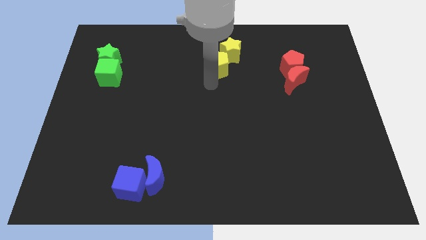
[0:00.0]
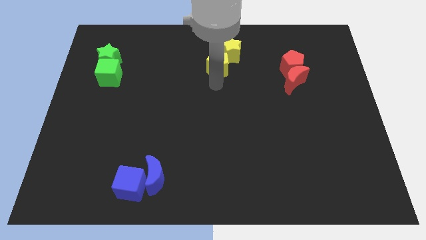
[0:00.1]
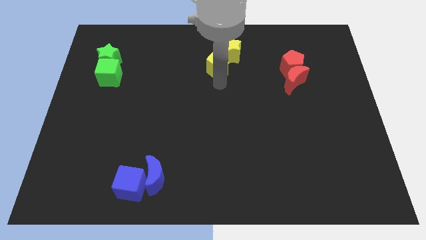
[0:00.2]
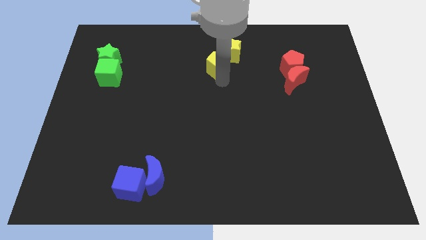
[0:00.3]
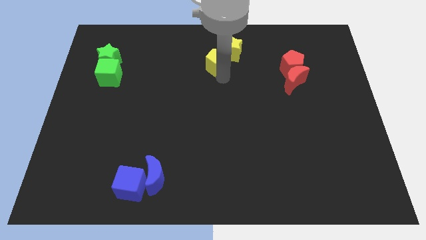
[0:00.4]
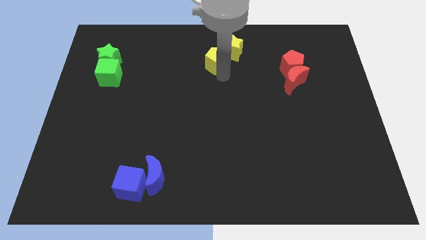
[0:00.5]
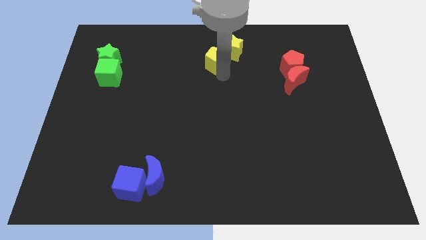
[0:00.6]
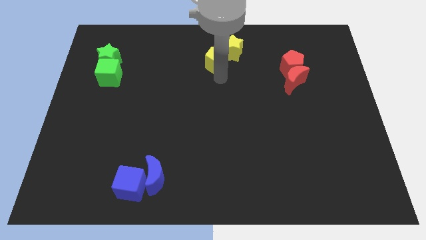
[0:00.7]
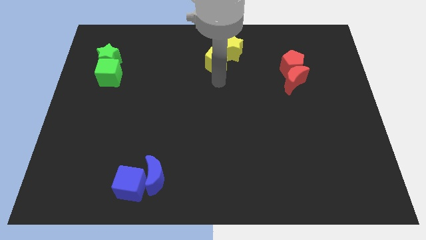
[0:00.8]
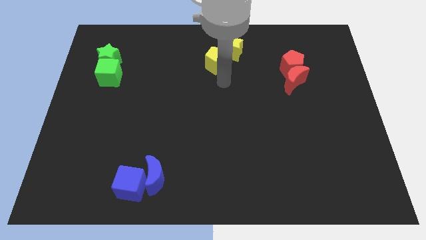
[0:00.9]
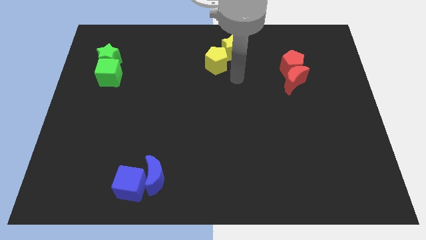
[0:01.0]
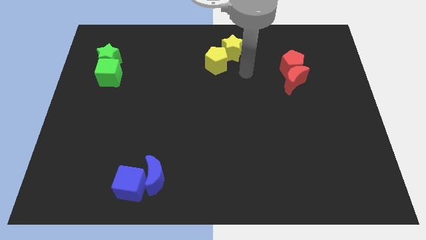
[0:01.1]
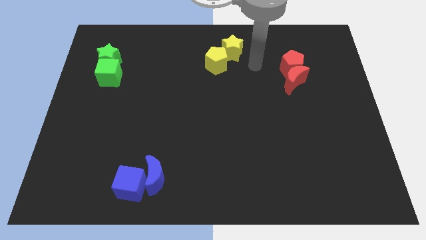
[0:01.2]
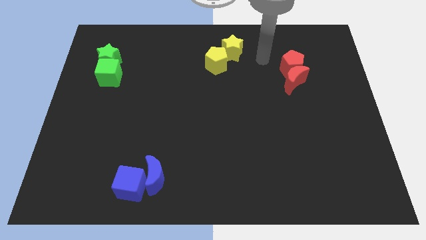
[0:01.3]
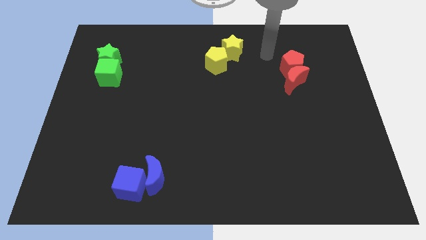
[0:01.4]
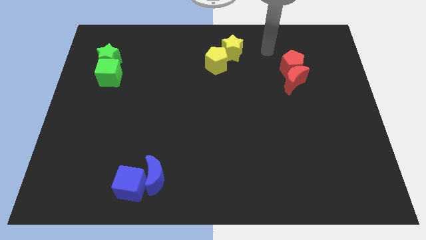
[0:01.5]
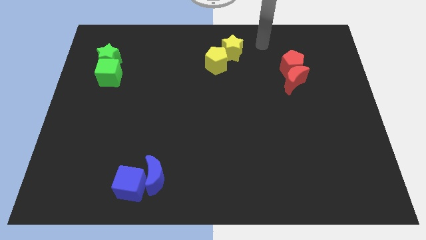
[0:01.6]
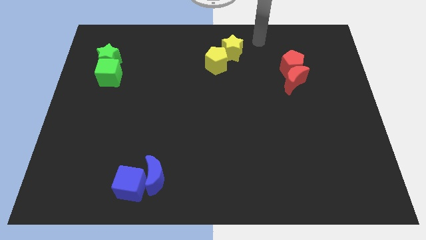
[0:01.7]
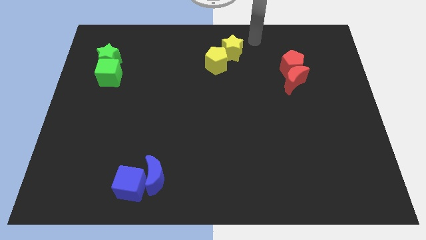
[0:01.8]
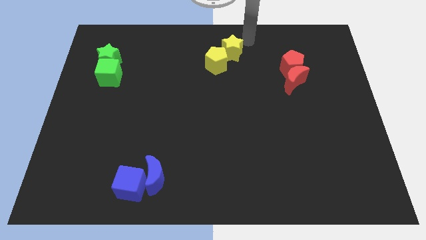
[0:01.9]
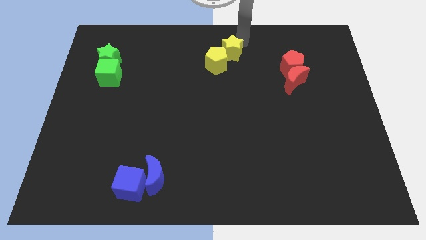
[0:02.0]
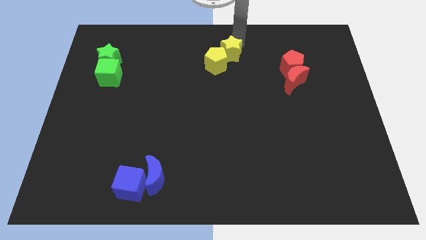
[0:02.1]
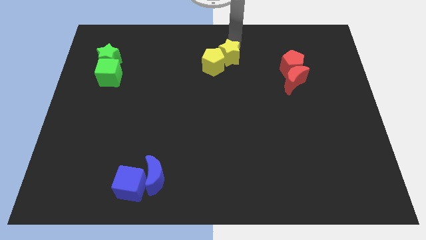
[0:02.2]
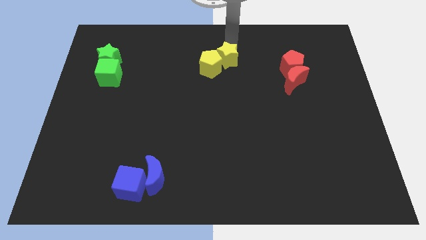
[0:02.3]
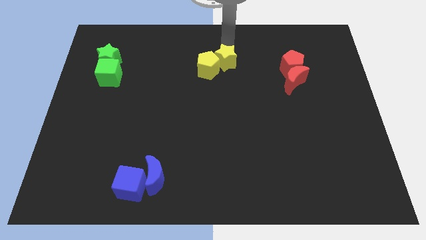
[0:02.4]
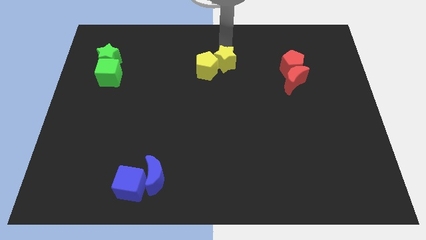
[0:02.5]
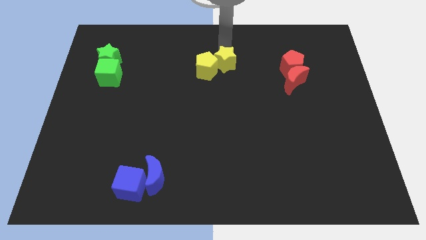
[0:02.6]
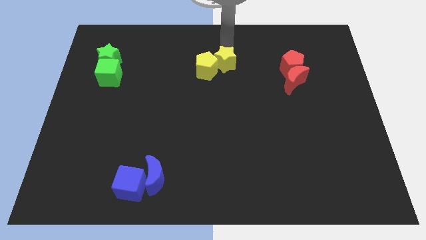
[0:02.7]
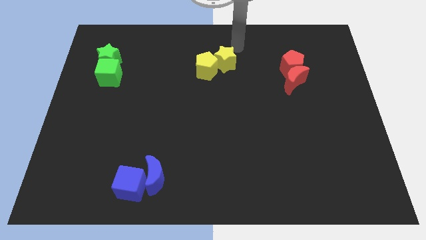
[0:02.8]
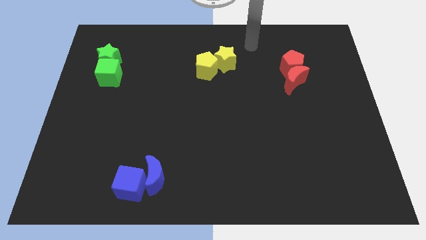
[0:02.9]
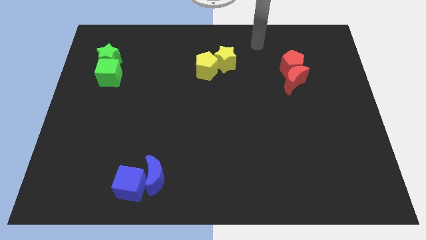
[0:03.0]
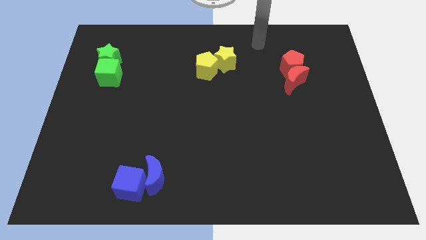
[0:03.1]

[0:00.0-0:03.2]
adjust the yellow blocks in between the red and green blocks

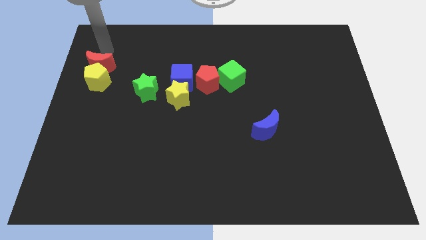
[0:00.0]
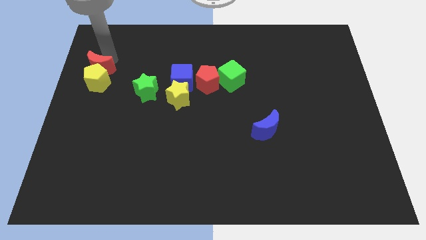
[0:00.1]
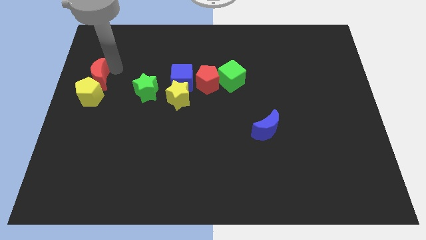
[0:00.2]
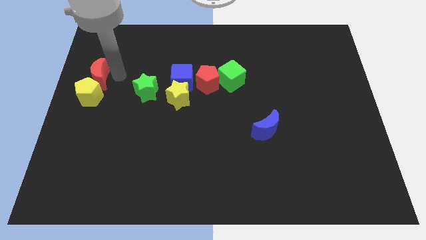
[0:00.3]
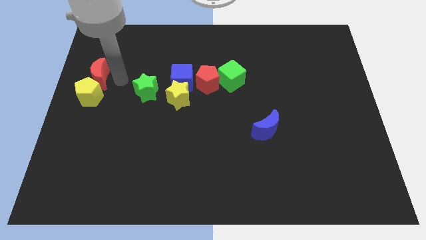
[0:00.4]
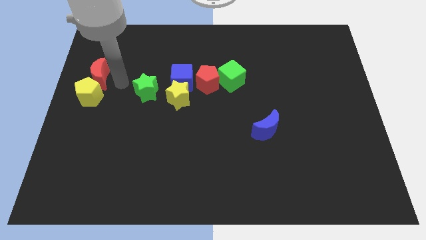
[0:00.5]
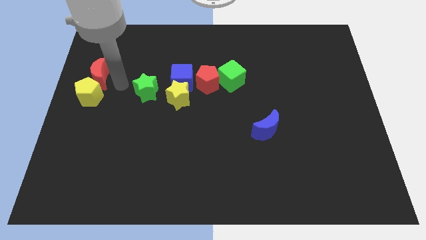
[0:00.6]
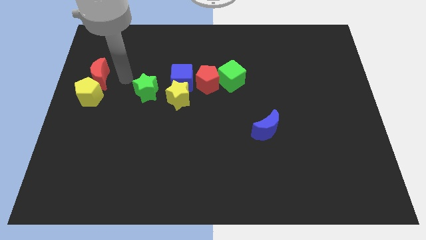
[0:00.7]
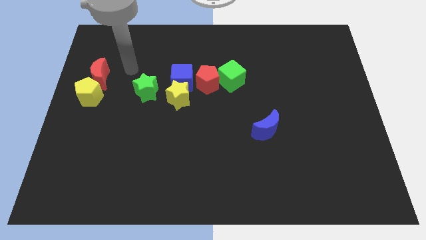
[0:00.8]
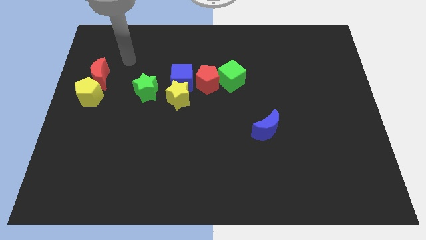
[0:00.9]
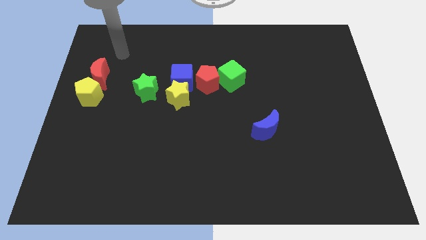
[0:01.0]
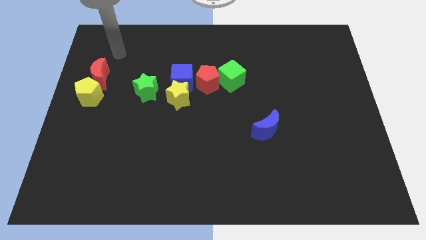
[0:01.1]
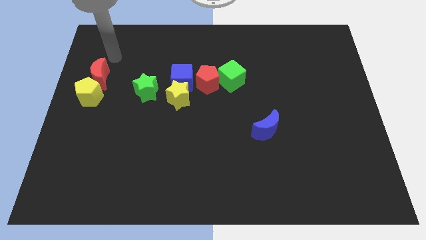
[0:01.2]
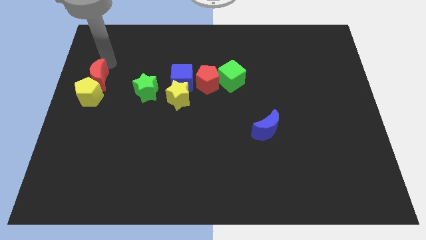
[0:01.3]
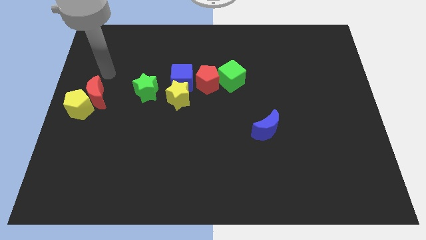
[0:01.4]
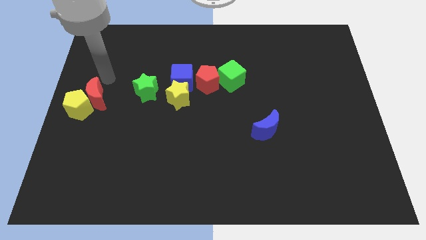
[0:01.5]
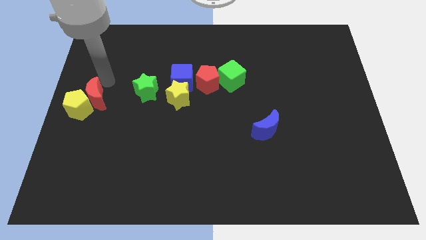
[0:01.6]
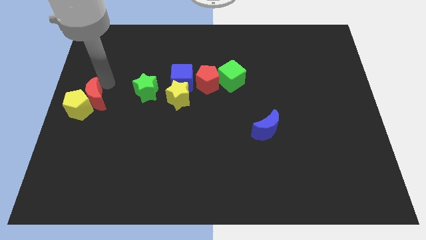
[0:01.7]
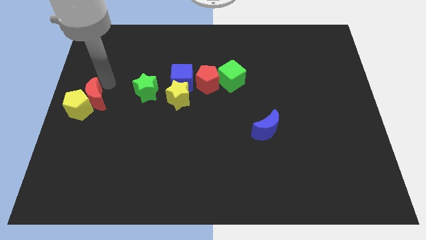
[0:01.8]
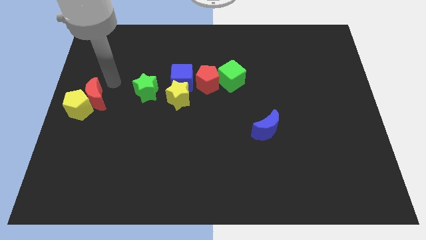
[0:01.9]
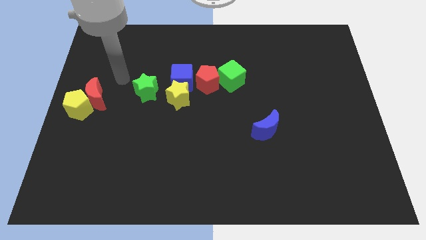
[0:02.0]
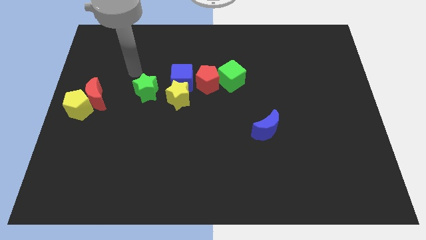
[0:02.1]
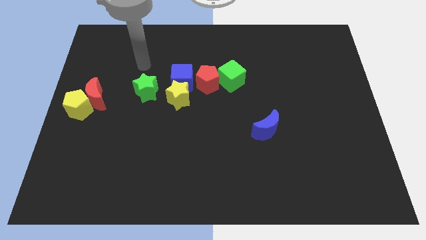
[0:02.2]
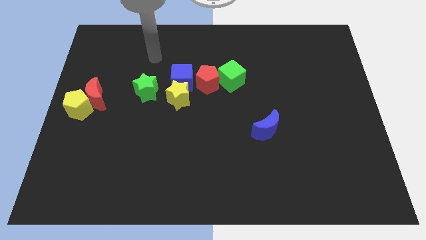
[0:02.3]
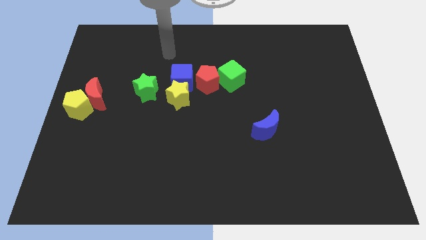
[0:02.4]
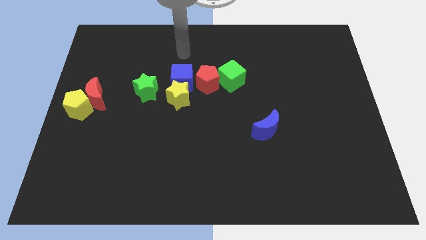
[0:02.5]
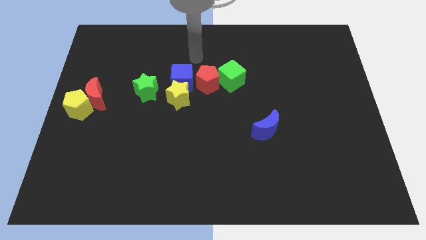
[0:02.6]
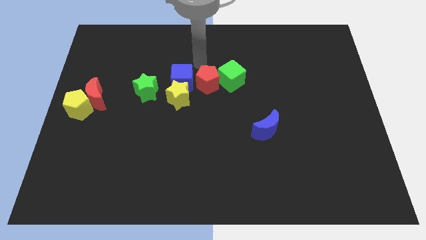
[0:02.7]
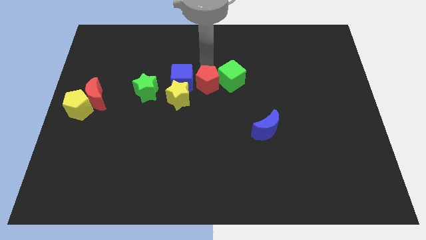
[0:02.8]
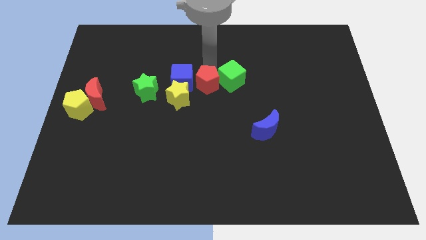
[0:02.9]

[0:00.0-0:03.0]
push the red crescent into the yellow pentagon

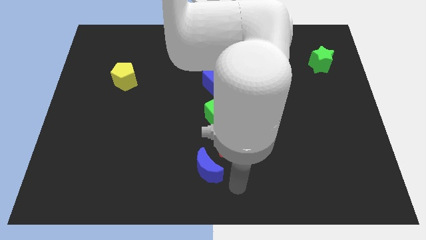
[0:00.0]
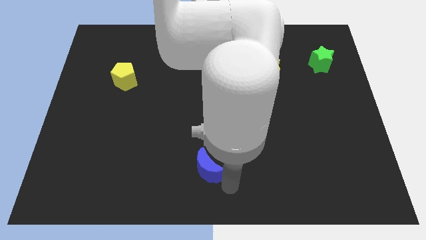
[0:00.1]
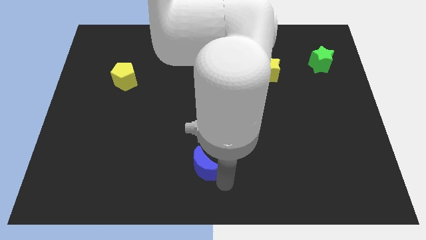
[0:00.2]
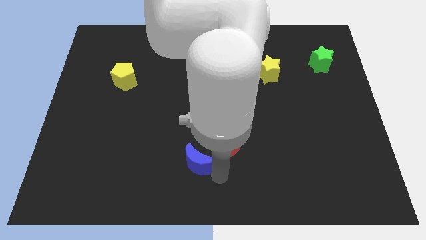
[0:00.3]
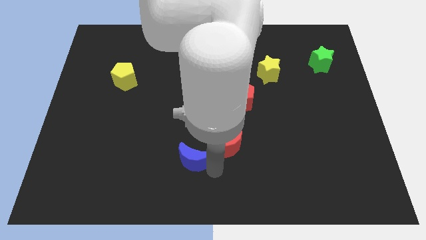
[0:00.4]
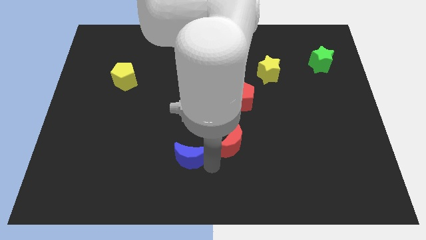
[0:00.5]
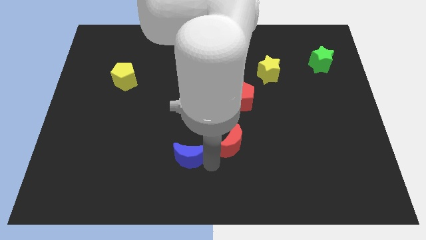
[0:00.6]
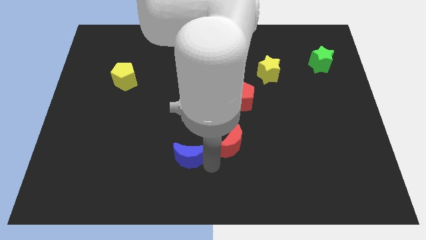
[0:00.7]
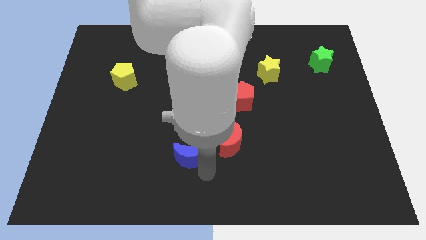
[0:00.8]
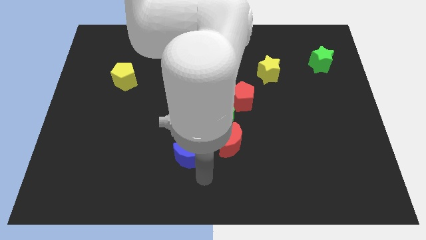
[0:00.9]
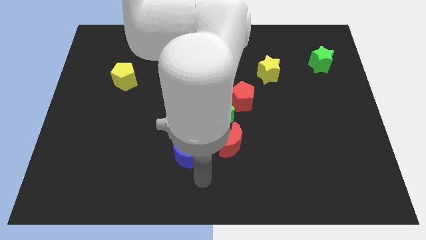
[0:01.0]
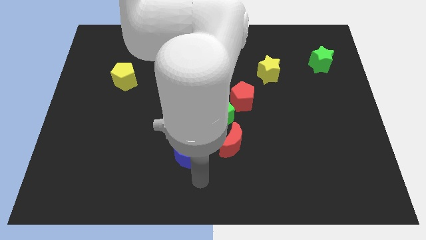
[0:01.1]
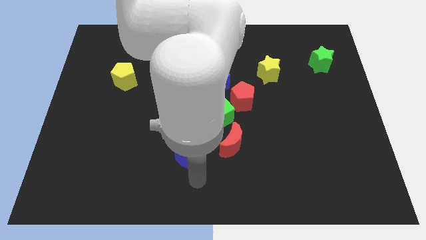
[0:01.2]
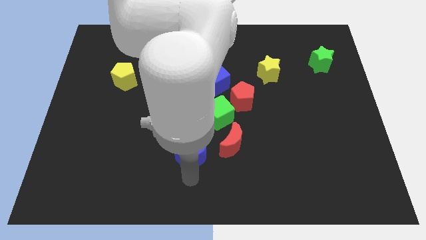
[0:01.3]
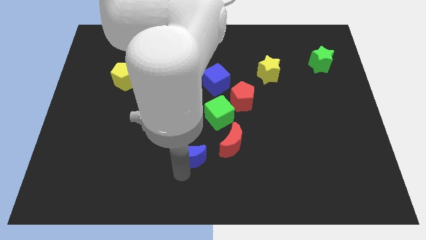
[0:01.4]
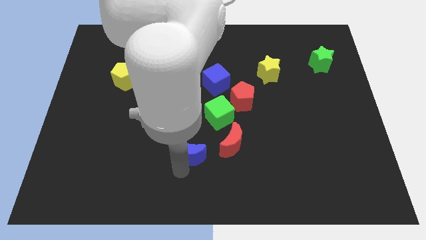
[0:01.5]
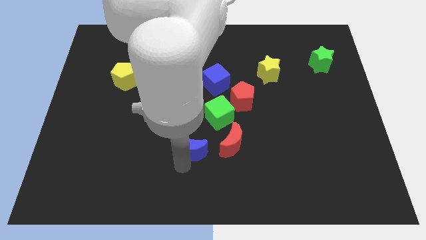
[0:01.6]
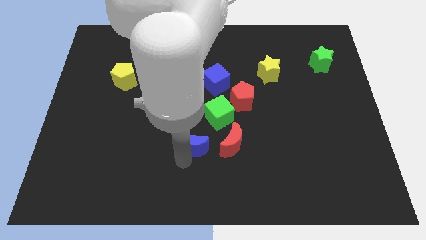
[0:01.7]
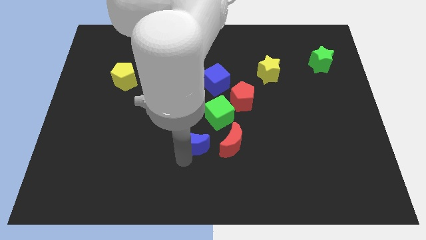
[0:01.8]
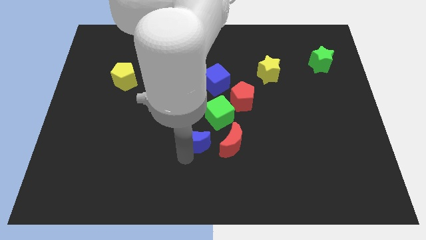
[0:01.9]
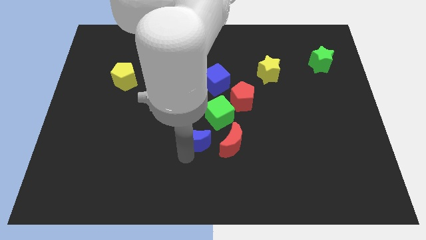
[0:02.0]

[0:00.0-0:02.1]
move the blue crescent left to the red crescent

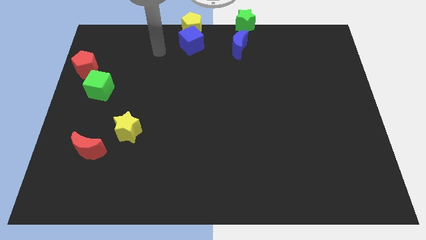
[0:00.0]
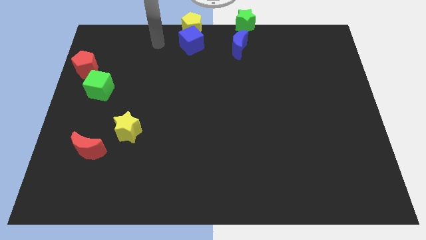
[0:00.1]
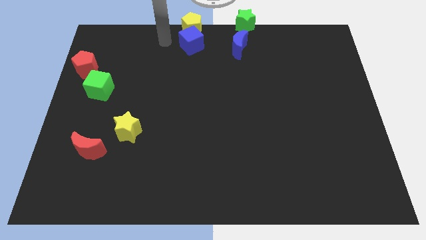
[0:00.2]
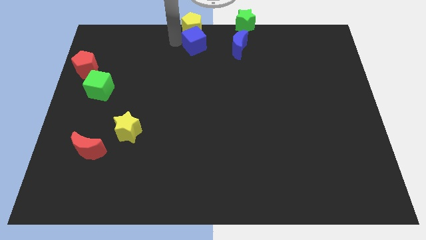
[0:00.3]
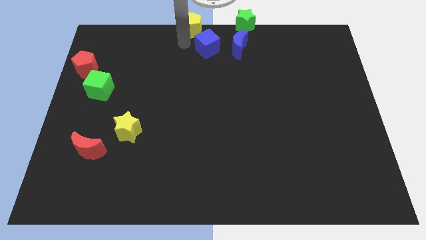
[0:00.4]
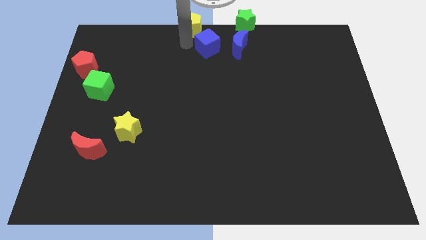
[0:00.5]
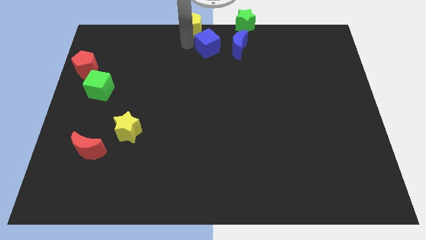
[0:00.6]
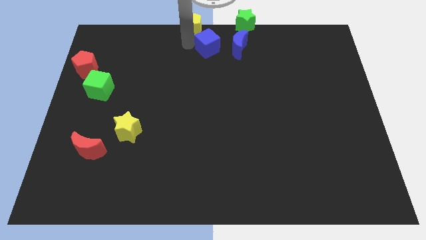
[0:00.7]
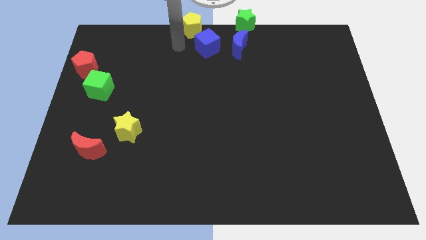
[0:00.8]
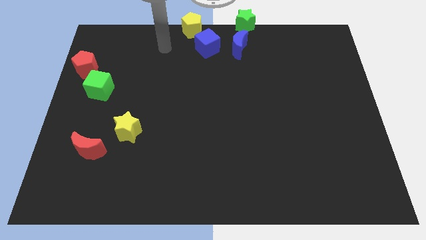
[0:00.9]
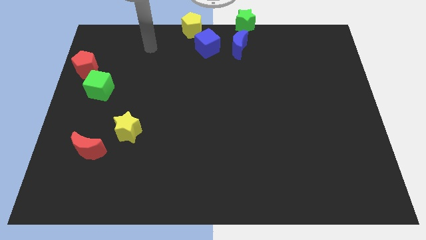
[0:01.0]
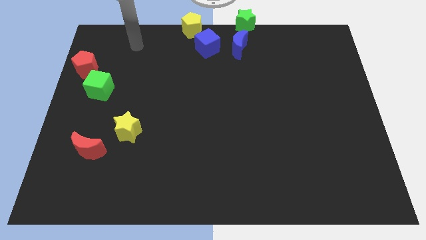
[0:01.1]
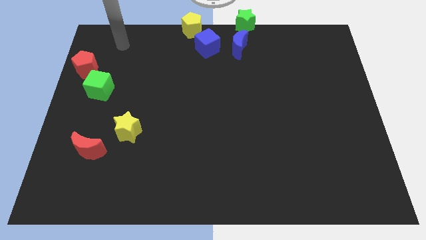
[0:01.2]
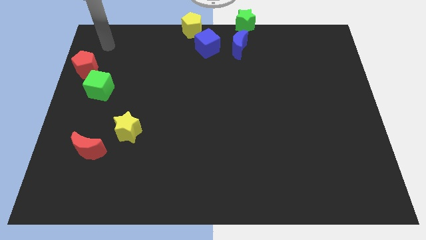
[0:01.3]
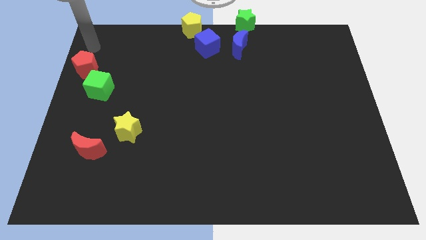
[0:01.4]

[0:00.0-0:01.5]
place blue cube left to blue crescent
